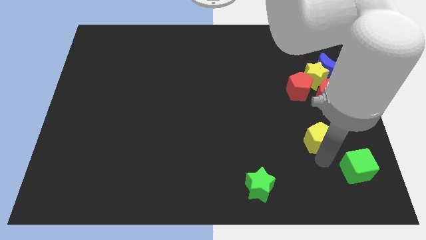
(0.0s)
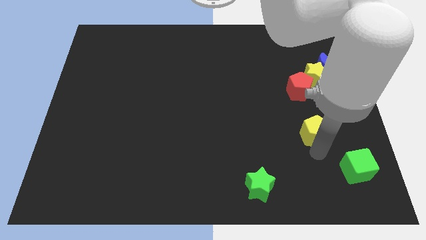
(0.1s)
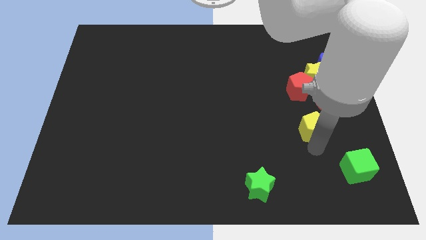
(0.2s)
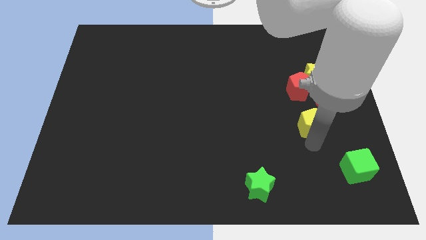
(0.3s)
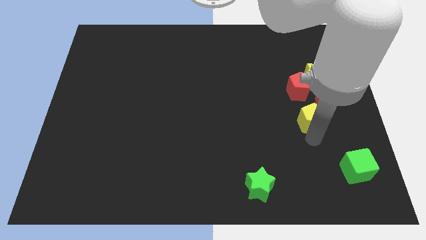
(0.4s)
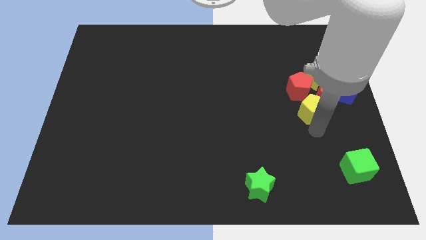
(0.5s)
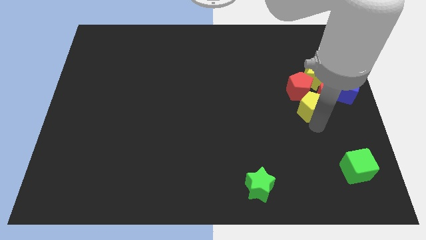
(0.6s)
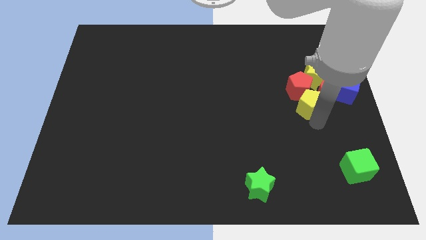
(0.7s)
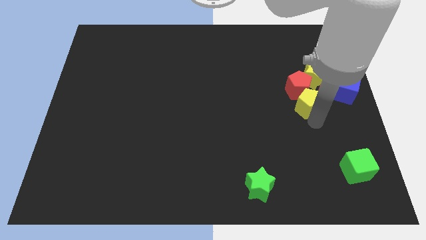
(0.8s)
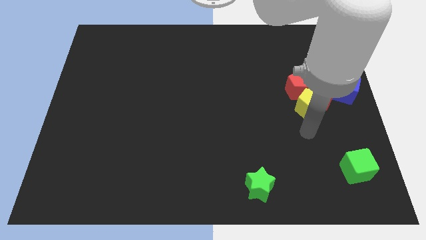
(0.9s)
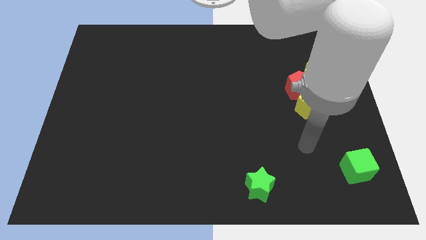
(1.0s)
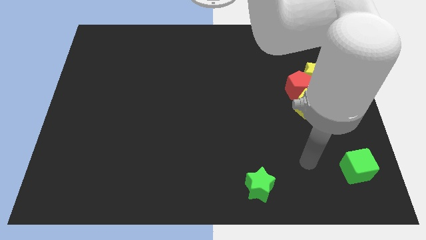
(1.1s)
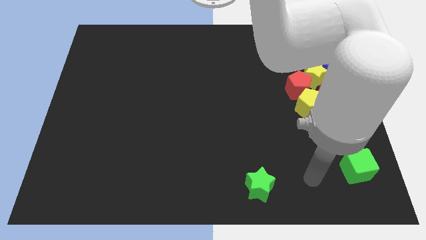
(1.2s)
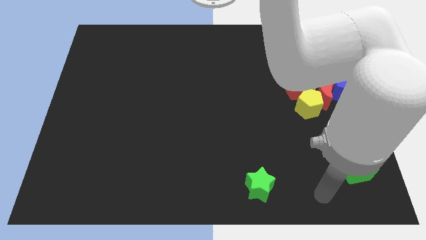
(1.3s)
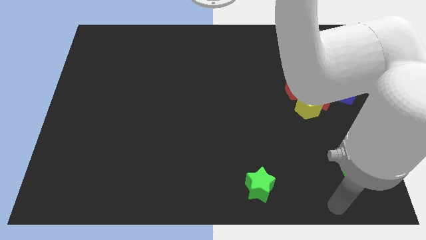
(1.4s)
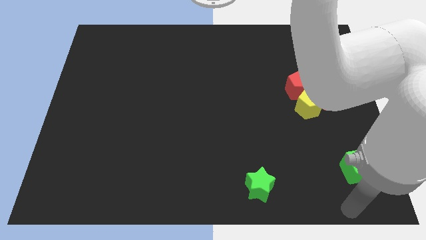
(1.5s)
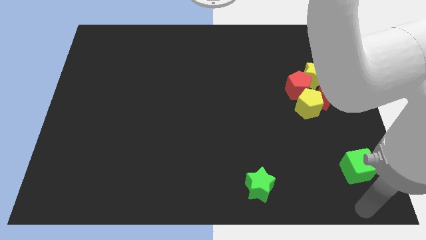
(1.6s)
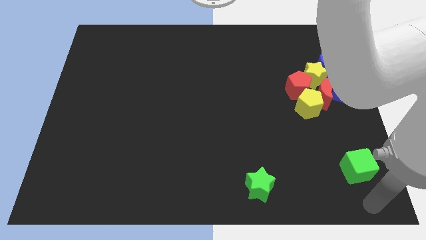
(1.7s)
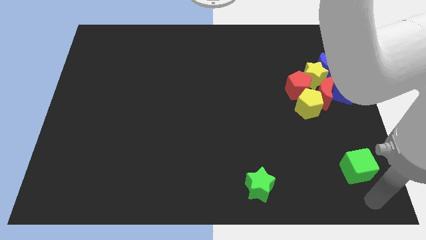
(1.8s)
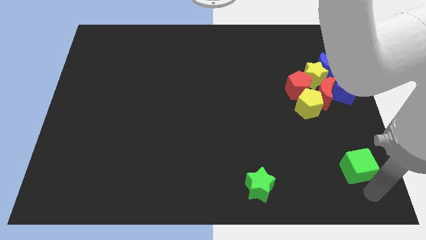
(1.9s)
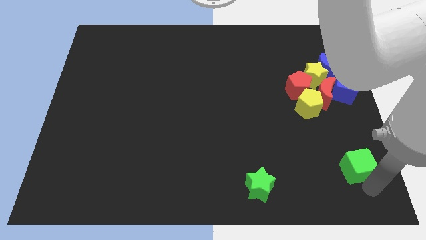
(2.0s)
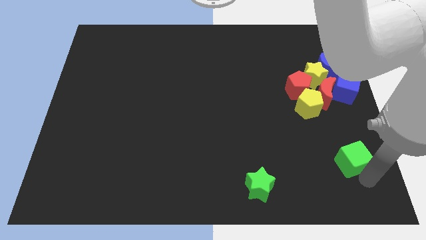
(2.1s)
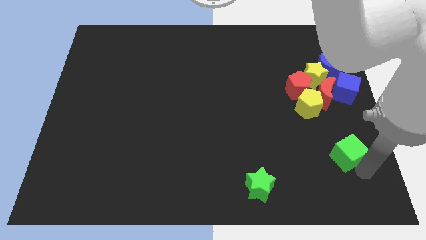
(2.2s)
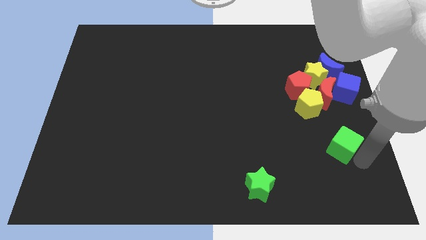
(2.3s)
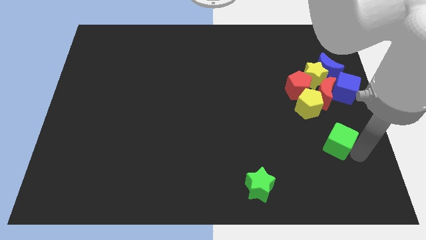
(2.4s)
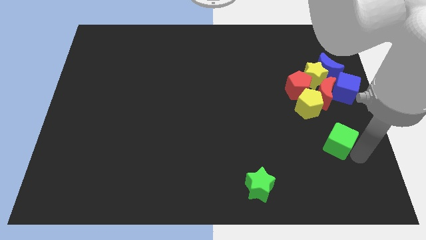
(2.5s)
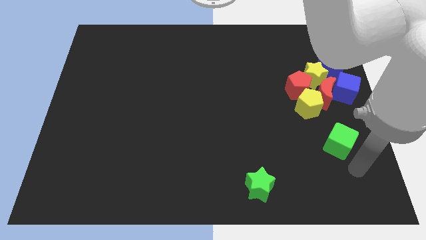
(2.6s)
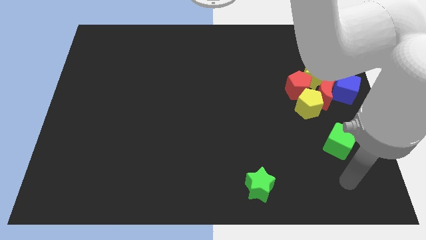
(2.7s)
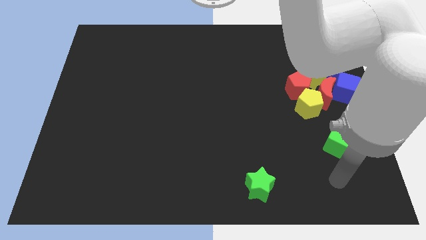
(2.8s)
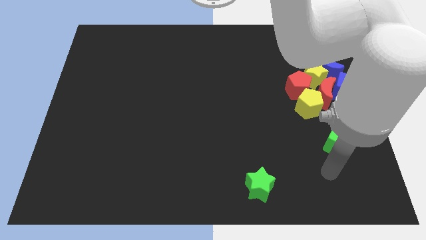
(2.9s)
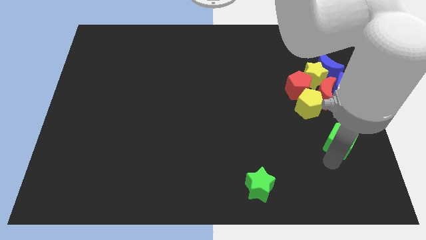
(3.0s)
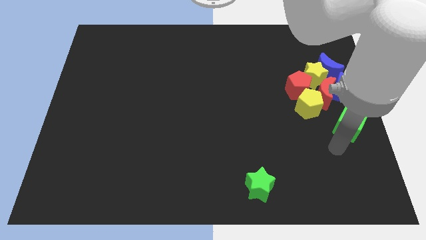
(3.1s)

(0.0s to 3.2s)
push yellow pentagon and green cube towards the group of blocks

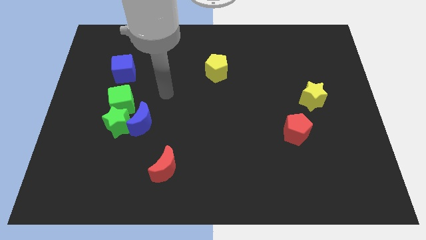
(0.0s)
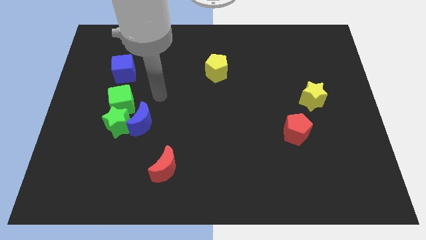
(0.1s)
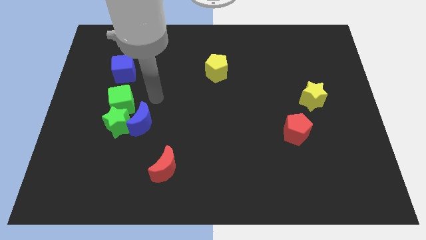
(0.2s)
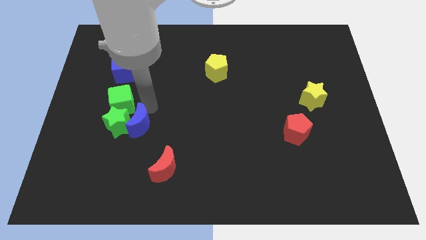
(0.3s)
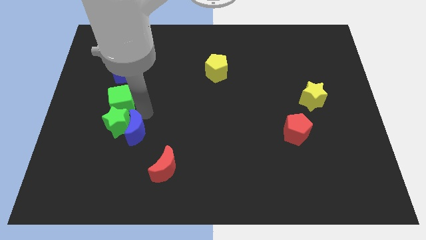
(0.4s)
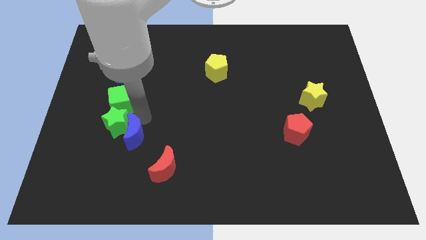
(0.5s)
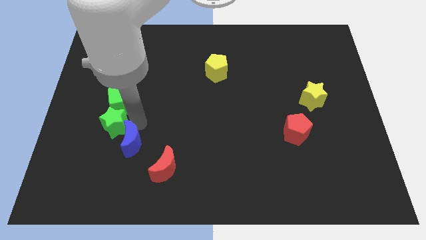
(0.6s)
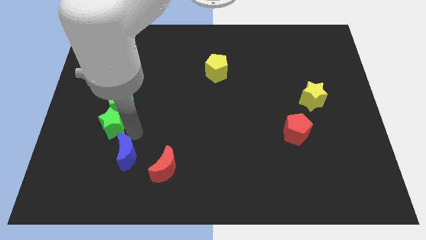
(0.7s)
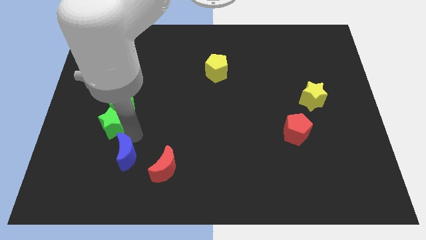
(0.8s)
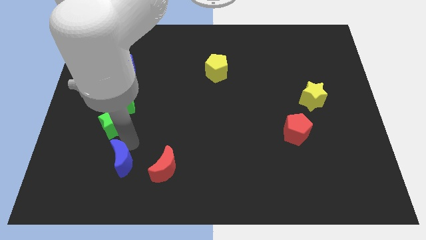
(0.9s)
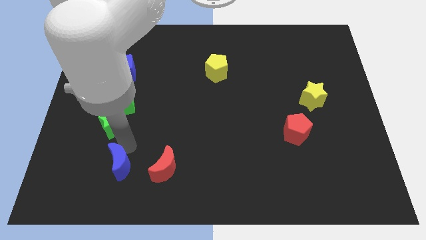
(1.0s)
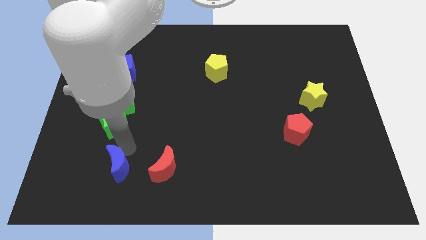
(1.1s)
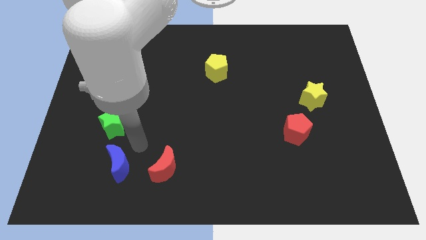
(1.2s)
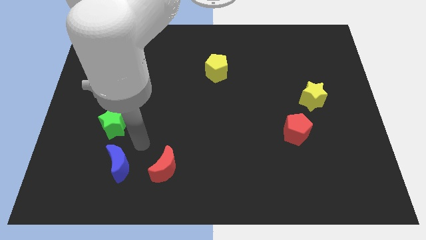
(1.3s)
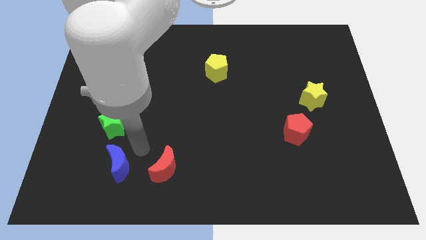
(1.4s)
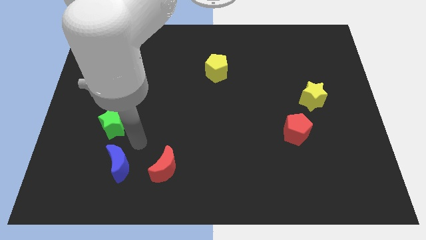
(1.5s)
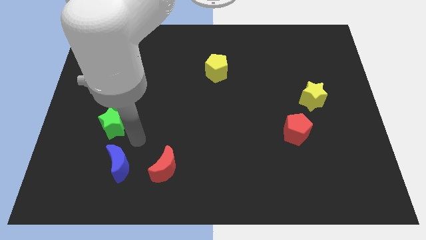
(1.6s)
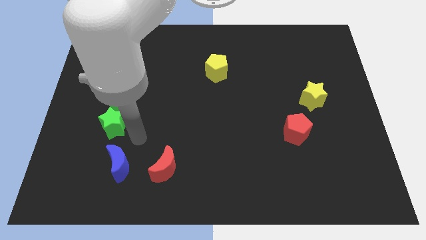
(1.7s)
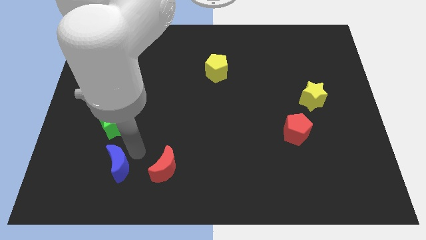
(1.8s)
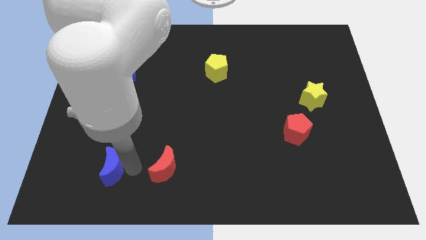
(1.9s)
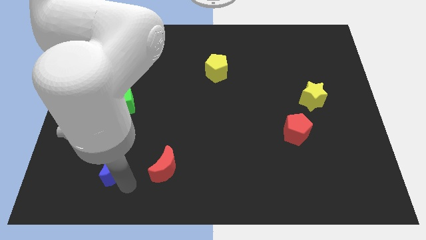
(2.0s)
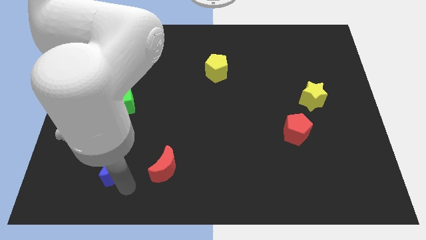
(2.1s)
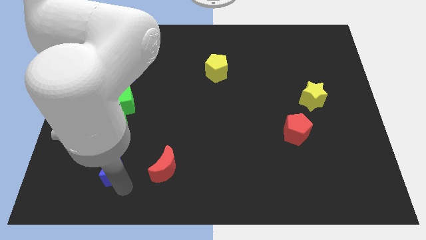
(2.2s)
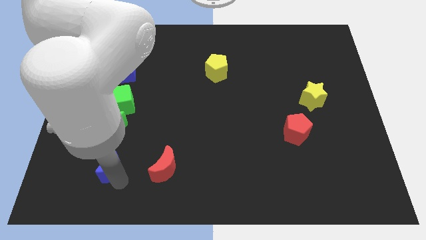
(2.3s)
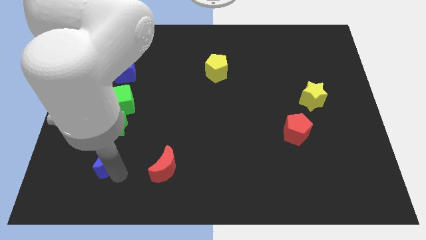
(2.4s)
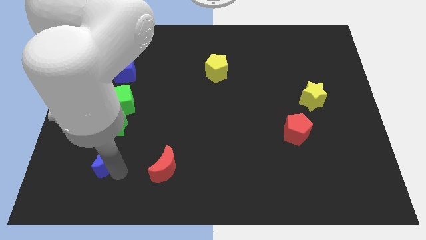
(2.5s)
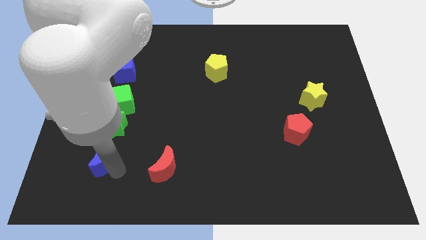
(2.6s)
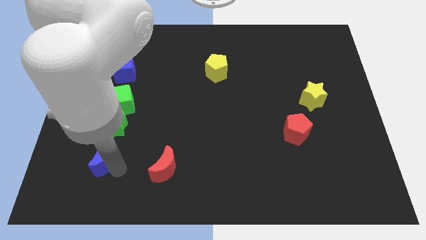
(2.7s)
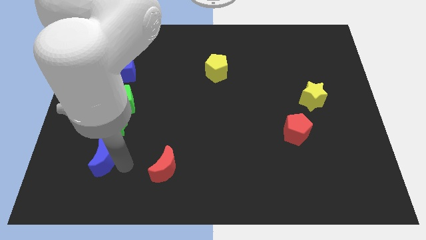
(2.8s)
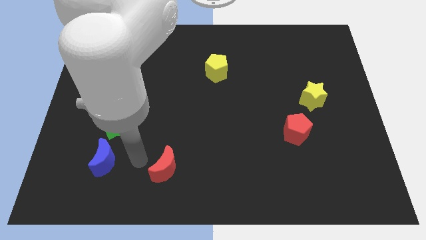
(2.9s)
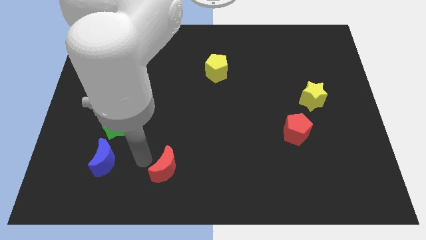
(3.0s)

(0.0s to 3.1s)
place the blue crescent to the bottom of the green star

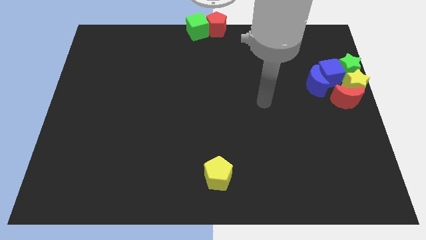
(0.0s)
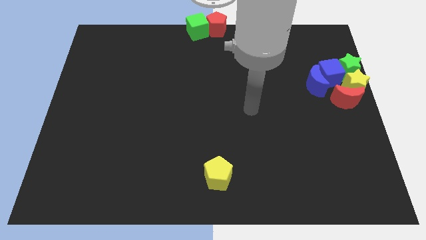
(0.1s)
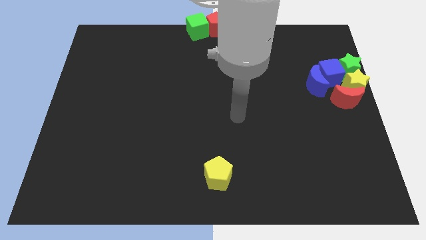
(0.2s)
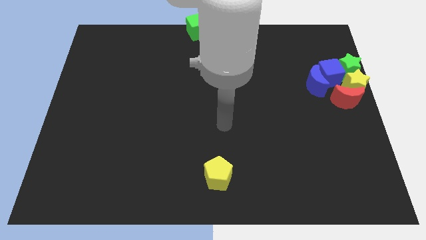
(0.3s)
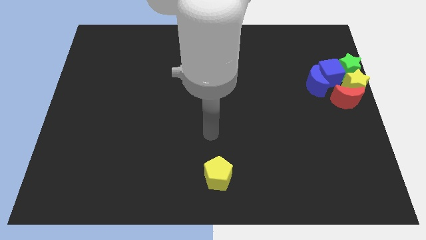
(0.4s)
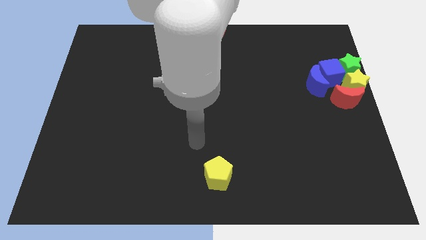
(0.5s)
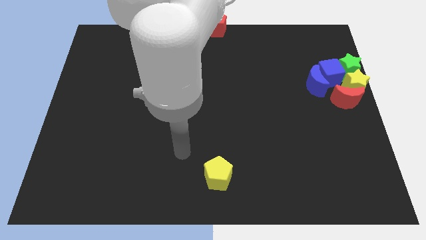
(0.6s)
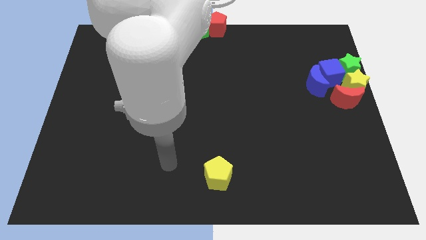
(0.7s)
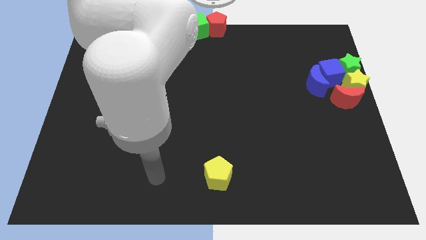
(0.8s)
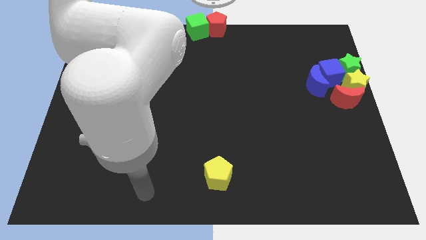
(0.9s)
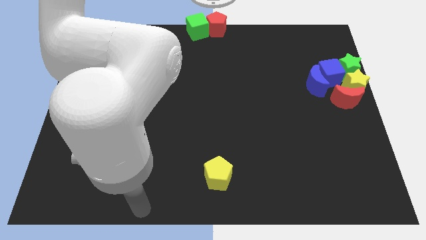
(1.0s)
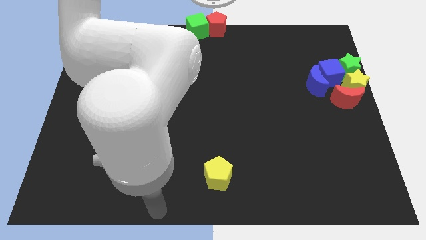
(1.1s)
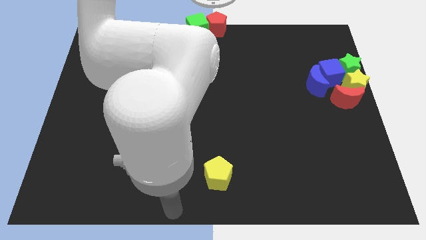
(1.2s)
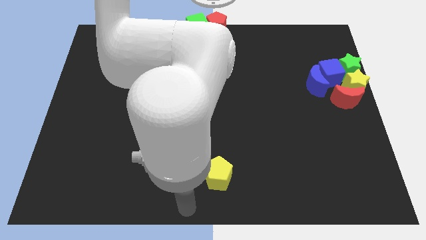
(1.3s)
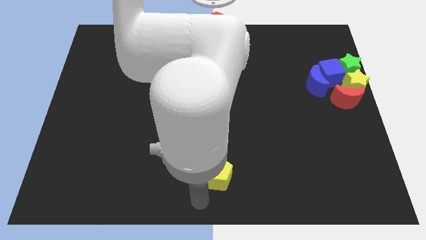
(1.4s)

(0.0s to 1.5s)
place your arm at the bottom of the yellow pentagon

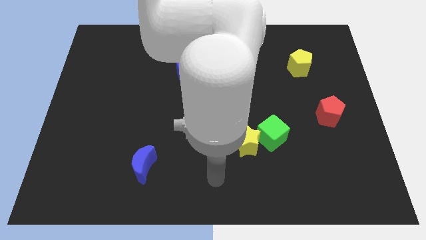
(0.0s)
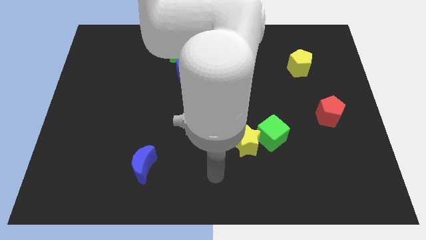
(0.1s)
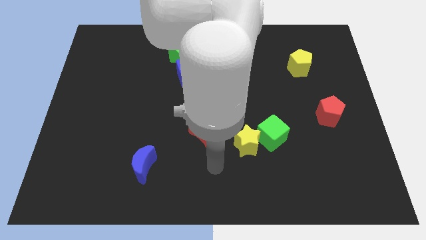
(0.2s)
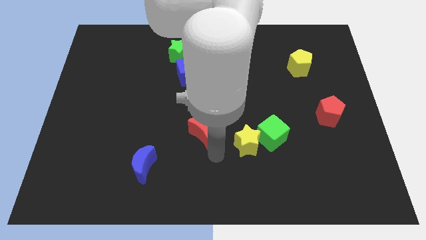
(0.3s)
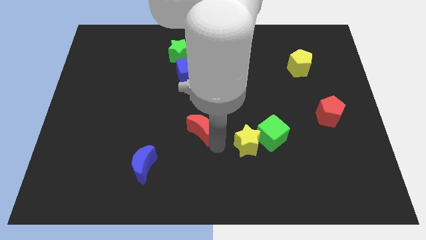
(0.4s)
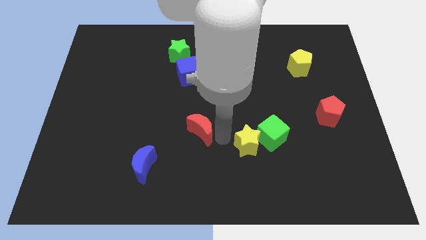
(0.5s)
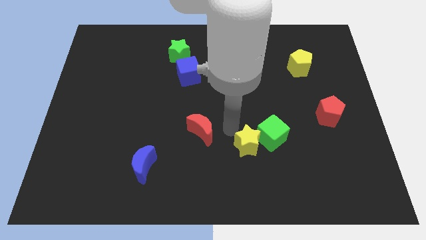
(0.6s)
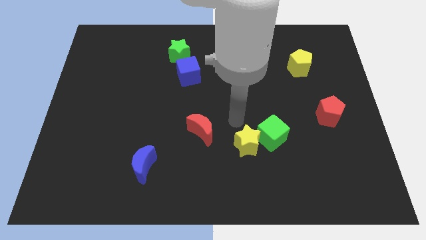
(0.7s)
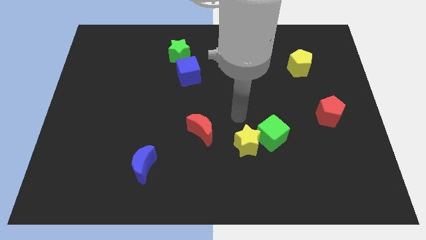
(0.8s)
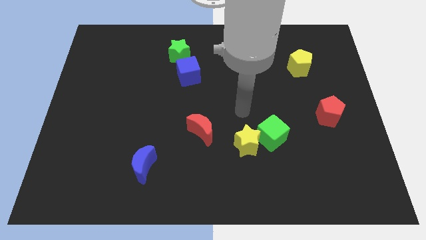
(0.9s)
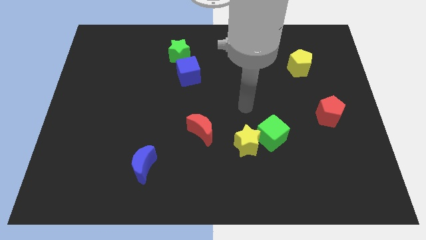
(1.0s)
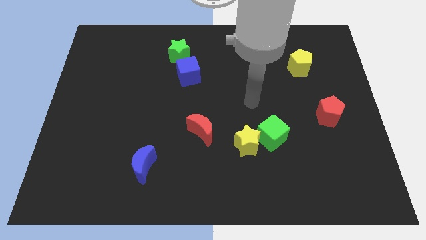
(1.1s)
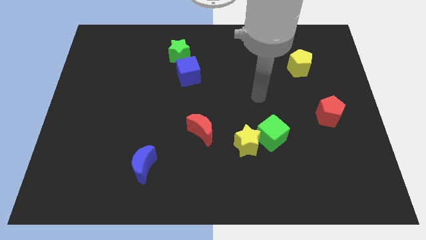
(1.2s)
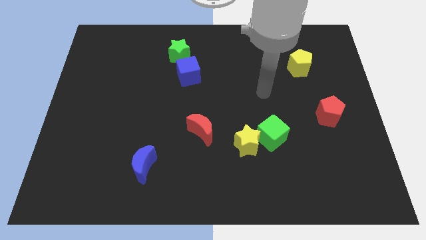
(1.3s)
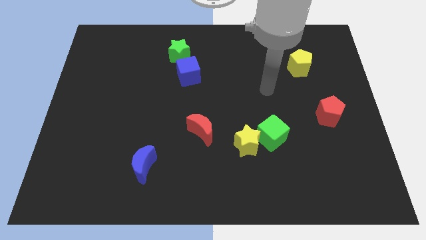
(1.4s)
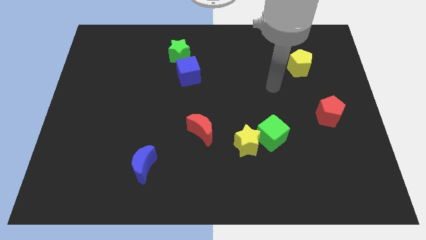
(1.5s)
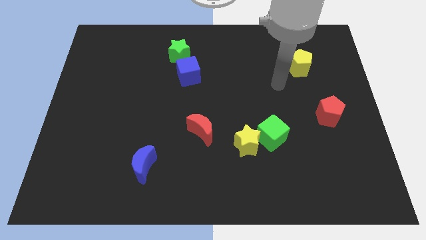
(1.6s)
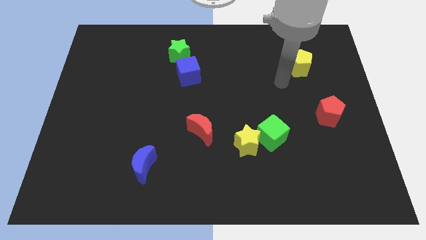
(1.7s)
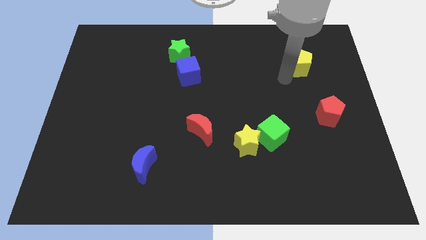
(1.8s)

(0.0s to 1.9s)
point your arm below yellow pentagon
